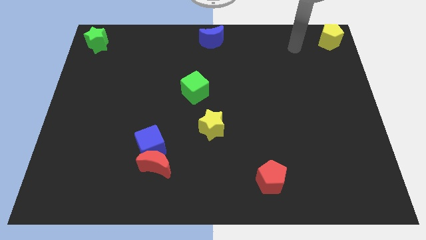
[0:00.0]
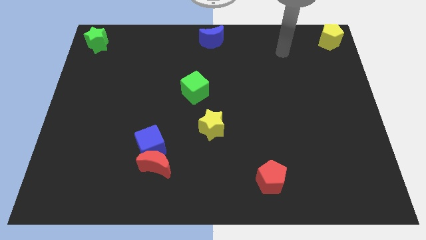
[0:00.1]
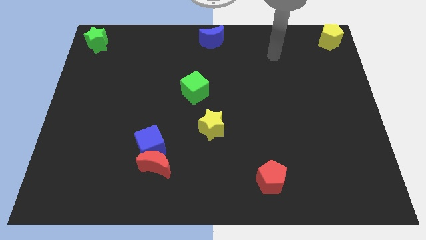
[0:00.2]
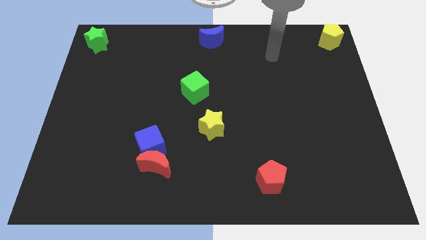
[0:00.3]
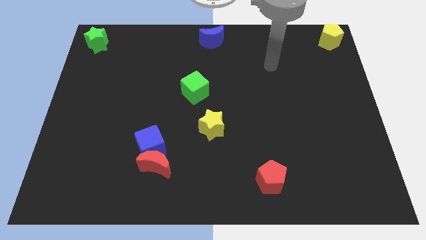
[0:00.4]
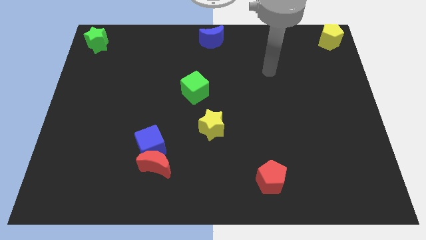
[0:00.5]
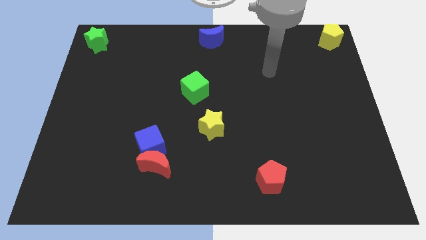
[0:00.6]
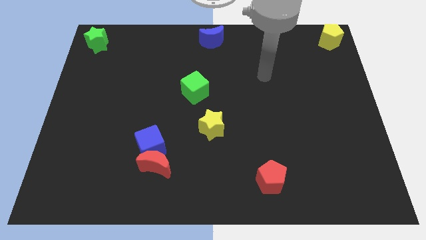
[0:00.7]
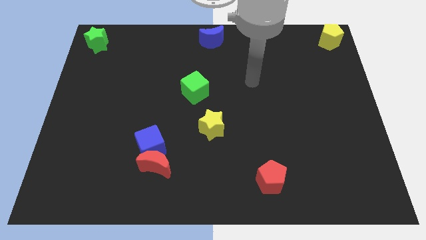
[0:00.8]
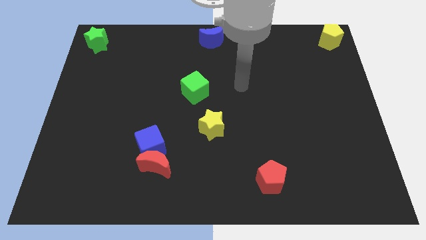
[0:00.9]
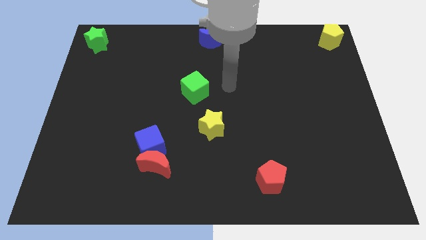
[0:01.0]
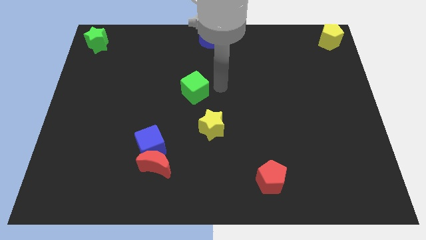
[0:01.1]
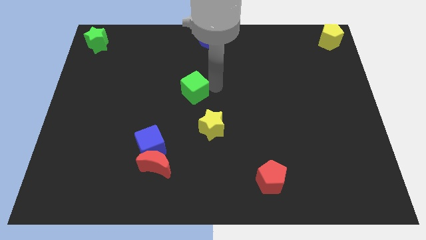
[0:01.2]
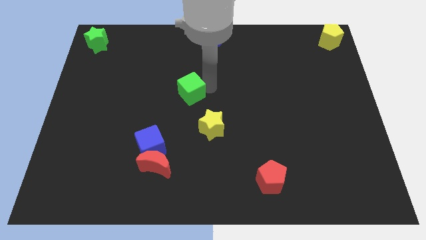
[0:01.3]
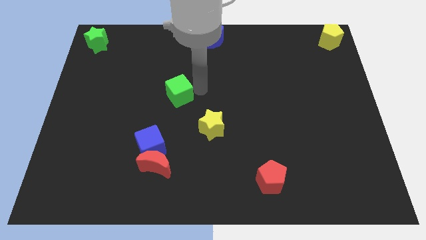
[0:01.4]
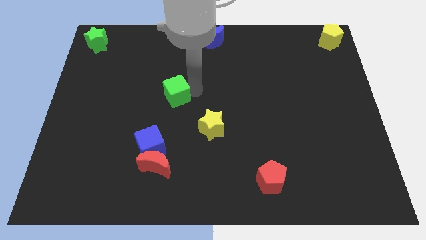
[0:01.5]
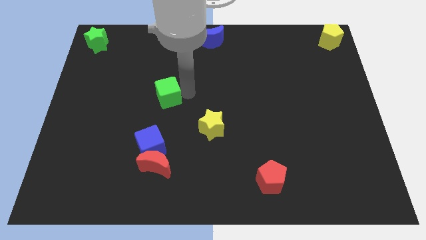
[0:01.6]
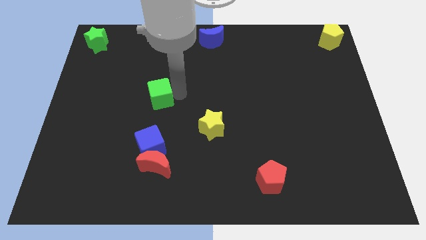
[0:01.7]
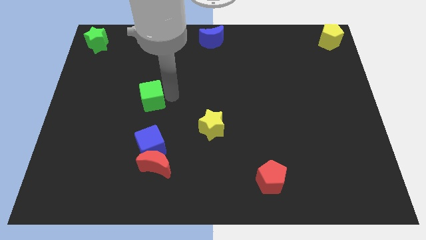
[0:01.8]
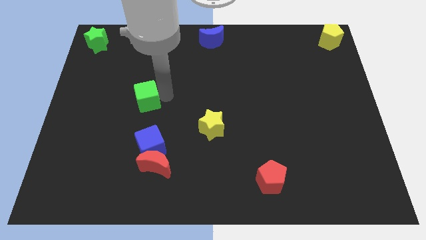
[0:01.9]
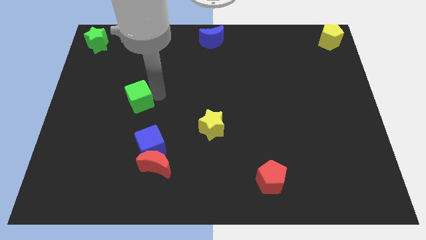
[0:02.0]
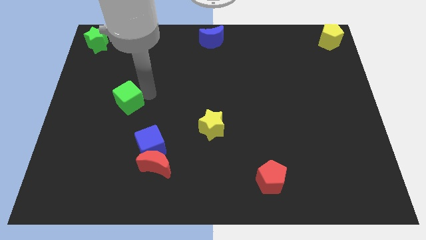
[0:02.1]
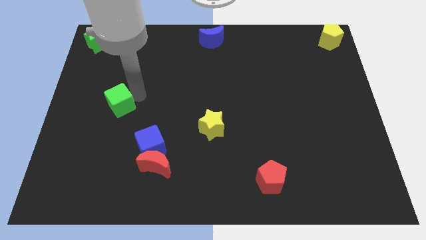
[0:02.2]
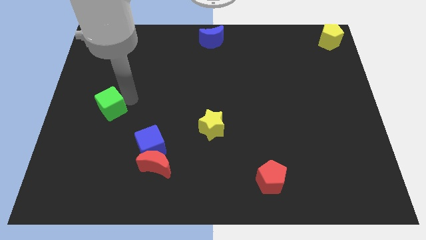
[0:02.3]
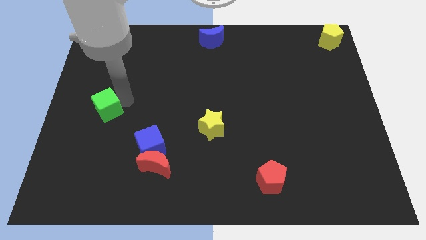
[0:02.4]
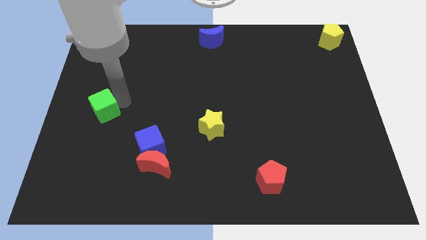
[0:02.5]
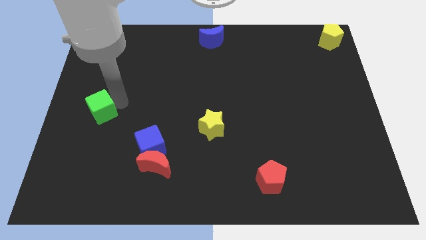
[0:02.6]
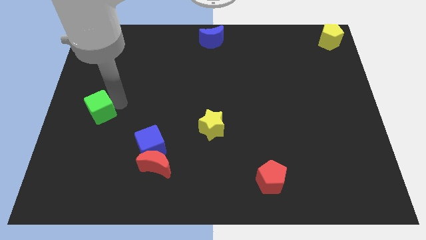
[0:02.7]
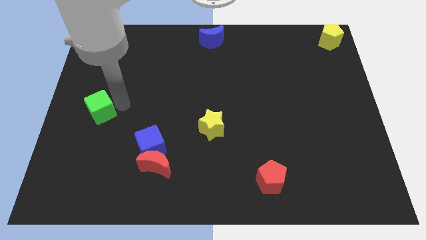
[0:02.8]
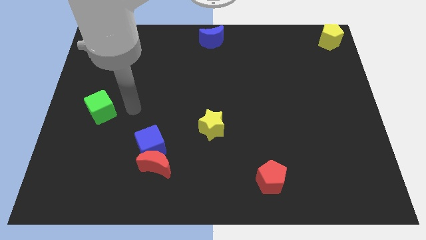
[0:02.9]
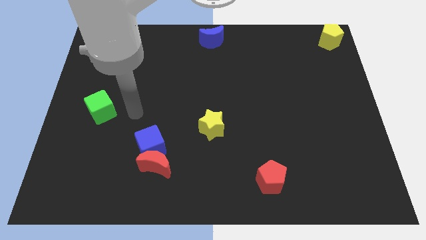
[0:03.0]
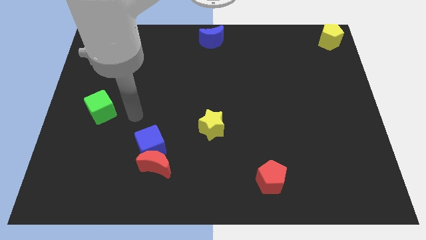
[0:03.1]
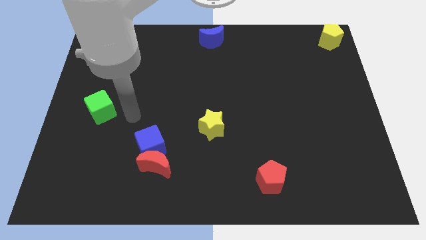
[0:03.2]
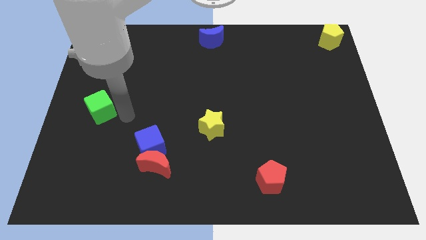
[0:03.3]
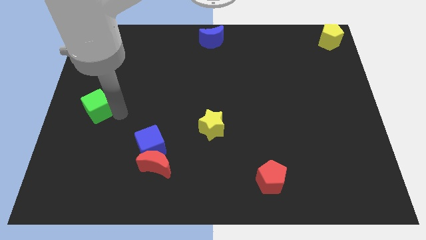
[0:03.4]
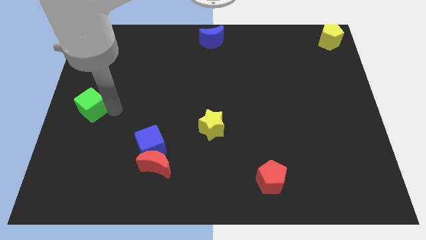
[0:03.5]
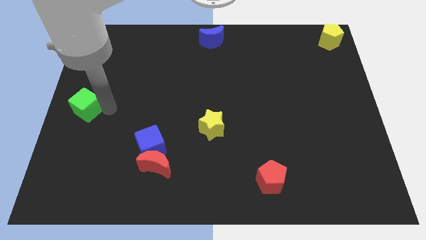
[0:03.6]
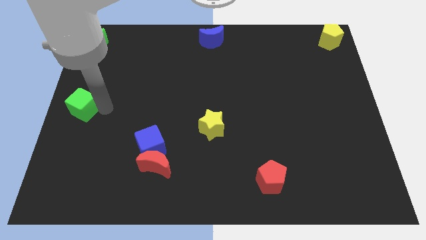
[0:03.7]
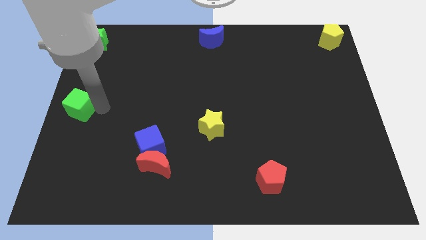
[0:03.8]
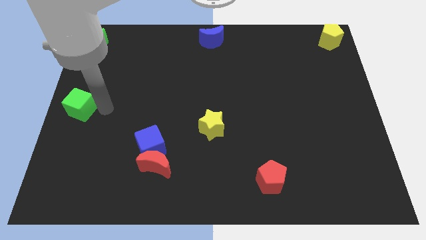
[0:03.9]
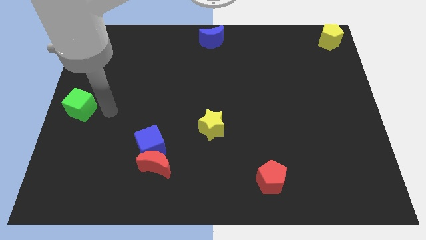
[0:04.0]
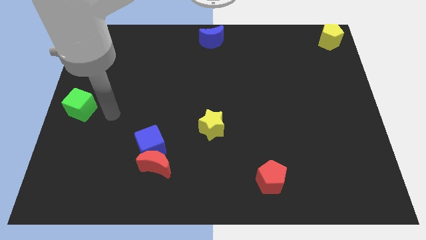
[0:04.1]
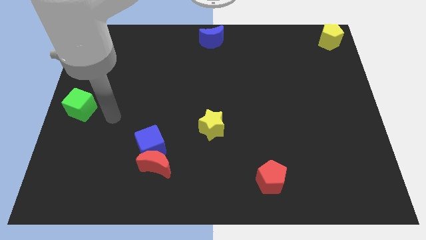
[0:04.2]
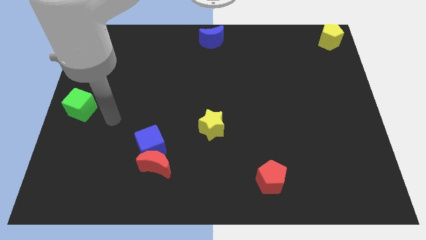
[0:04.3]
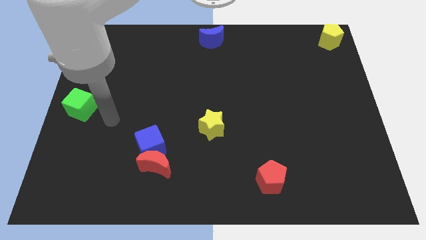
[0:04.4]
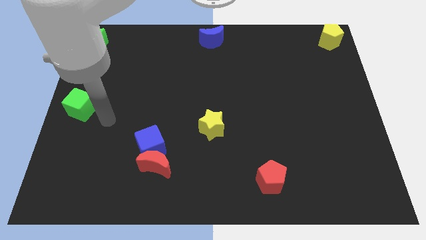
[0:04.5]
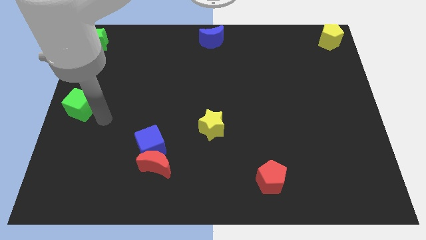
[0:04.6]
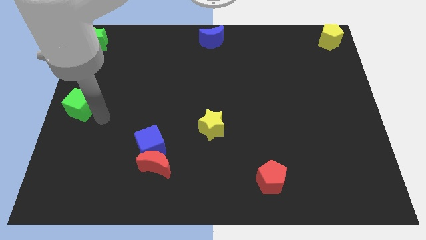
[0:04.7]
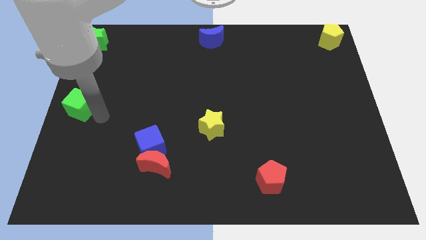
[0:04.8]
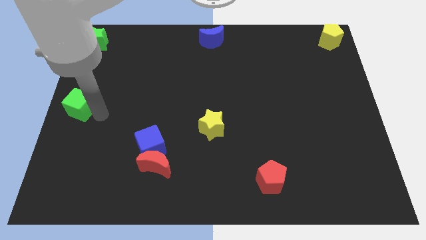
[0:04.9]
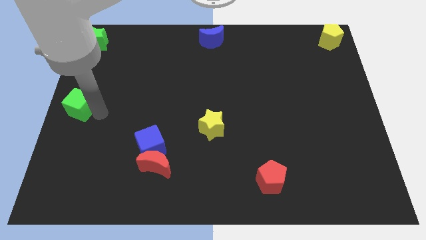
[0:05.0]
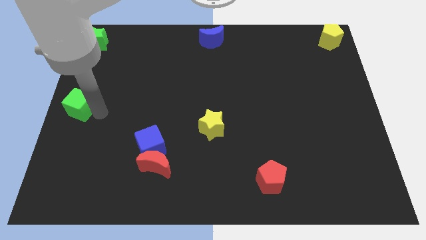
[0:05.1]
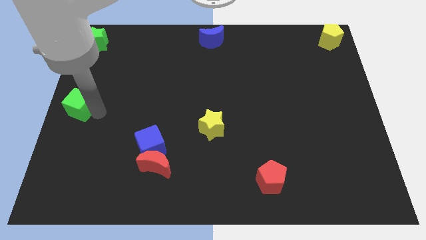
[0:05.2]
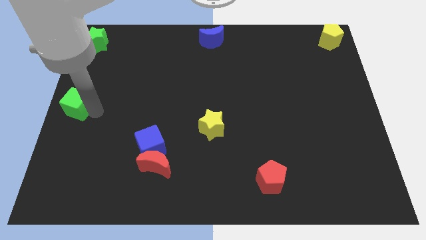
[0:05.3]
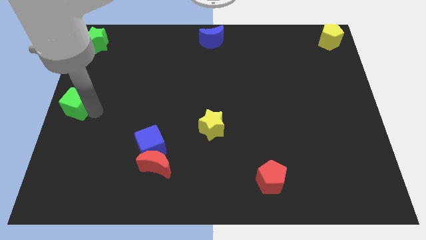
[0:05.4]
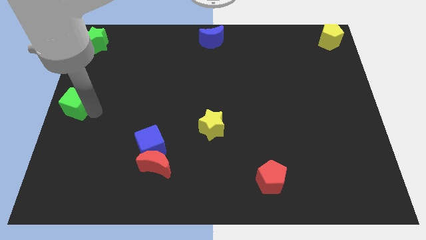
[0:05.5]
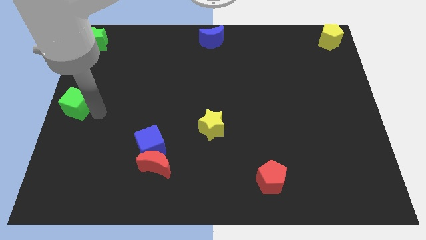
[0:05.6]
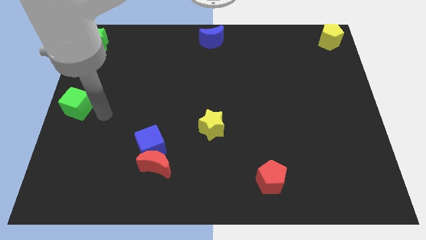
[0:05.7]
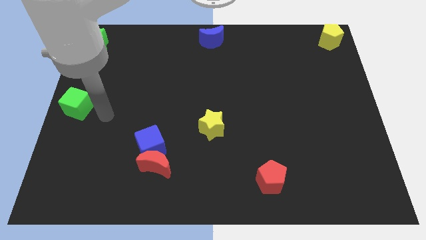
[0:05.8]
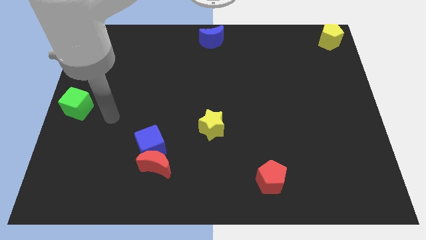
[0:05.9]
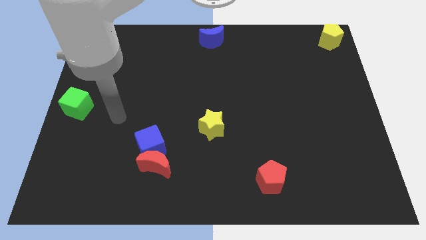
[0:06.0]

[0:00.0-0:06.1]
push the green cube to the left side of the board

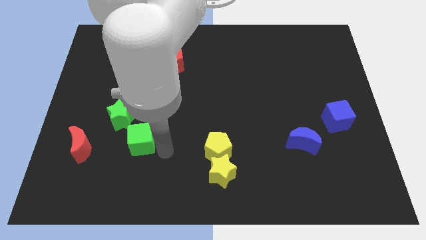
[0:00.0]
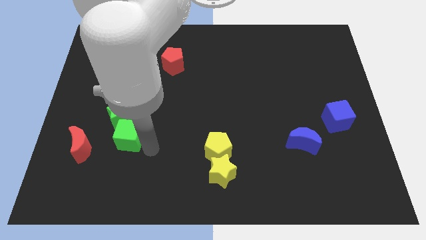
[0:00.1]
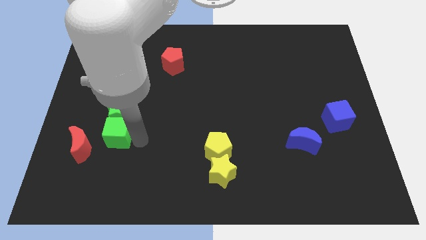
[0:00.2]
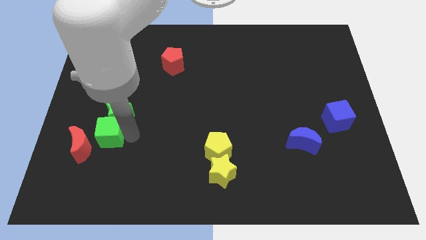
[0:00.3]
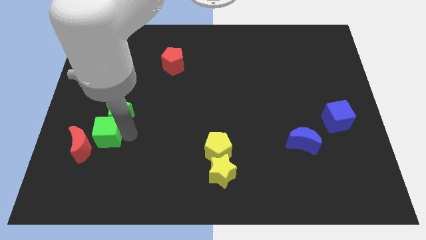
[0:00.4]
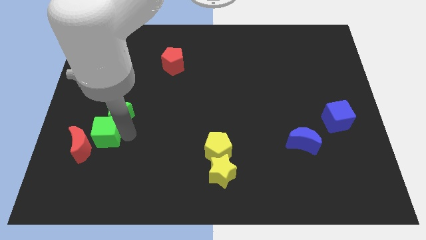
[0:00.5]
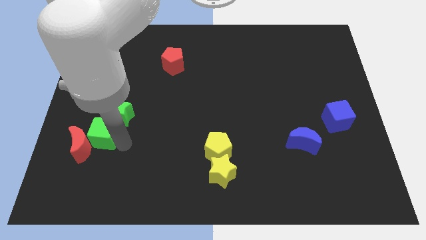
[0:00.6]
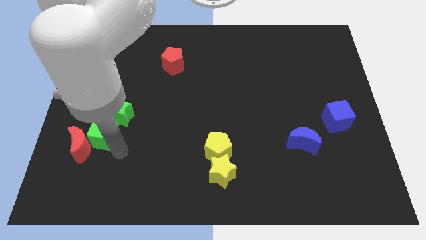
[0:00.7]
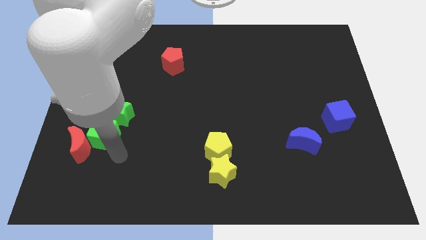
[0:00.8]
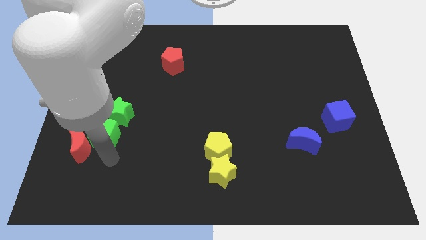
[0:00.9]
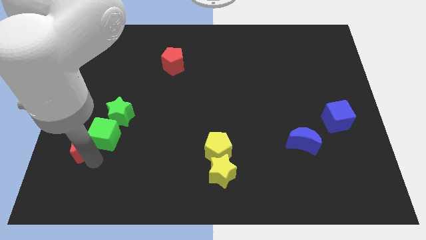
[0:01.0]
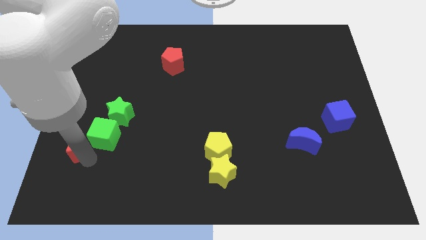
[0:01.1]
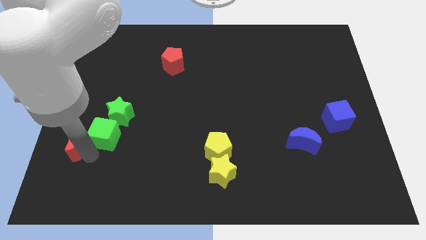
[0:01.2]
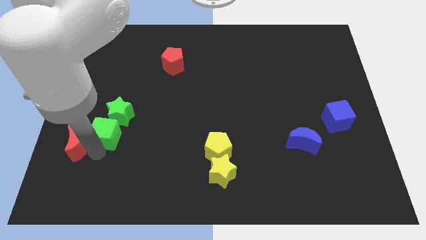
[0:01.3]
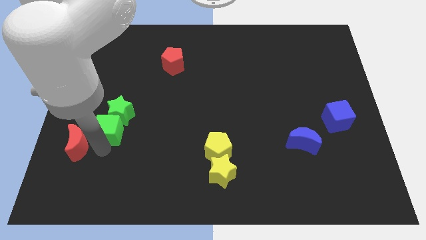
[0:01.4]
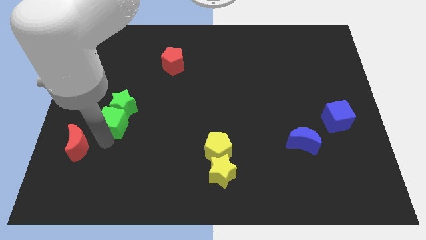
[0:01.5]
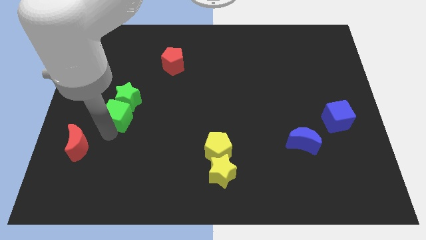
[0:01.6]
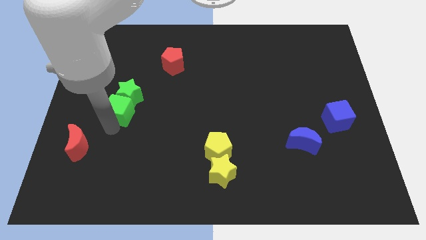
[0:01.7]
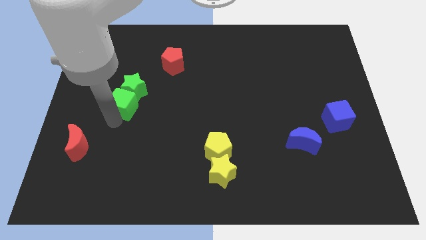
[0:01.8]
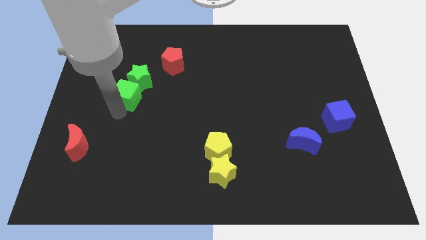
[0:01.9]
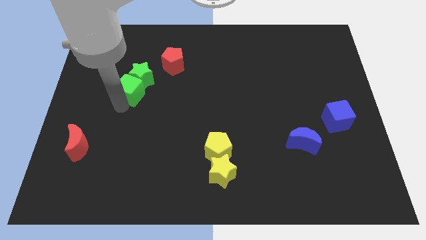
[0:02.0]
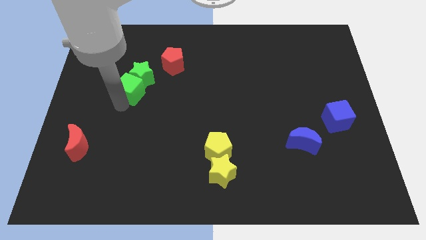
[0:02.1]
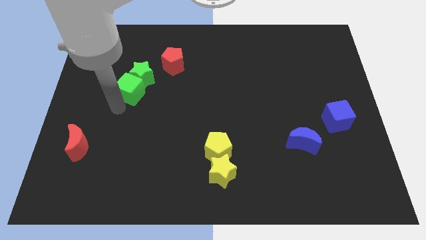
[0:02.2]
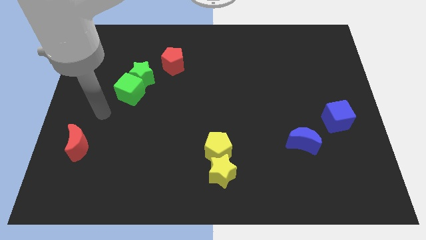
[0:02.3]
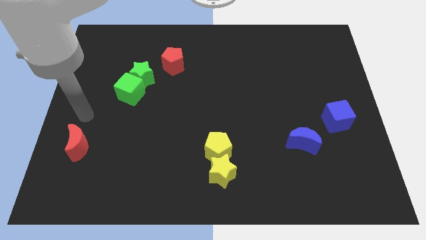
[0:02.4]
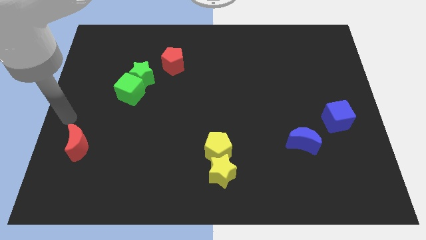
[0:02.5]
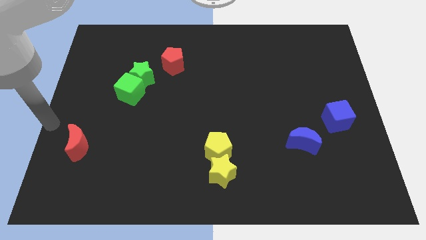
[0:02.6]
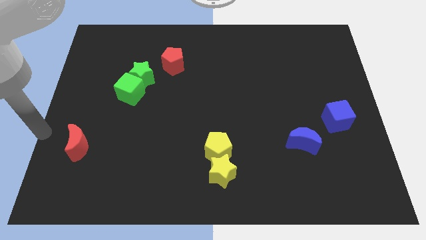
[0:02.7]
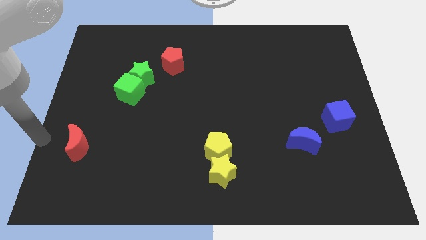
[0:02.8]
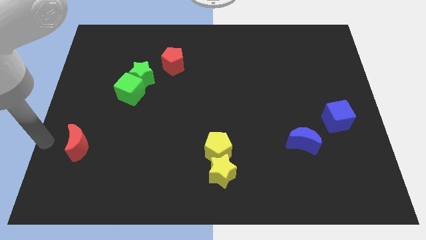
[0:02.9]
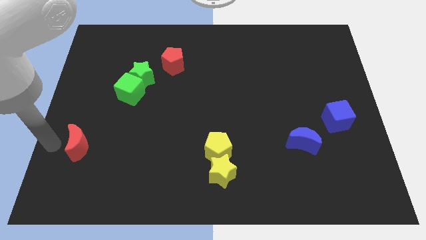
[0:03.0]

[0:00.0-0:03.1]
push the green star to the bottom left side of the red pentagon with the green cube
